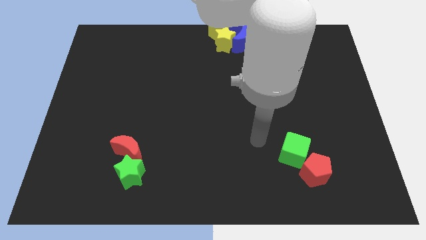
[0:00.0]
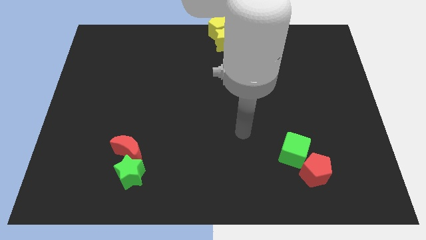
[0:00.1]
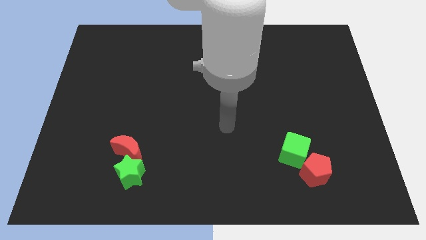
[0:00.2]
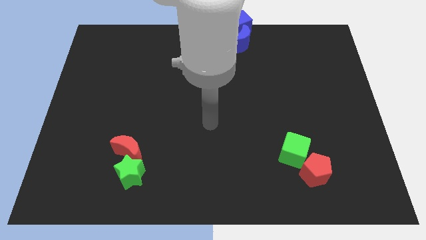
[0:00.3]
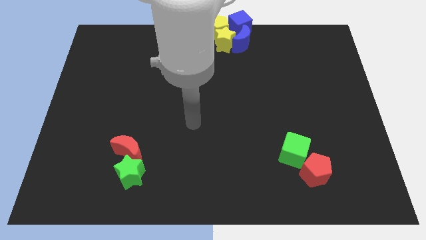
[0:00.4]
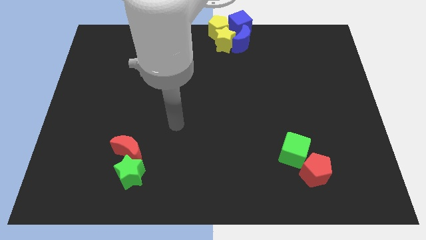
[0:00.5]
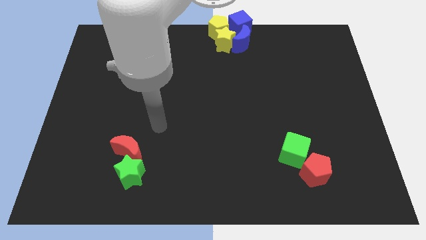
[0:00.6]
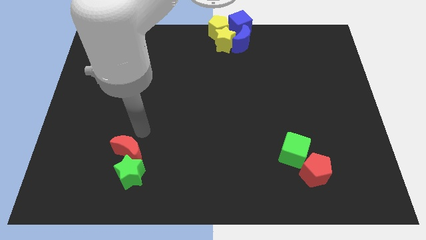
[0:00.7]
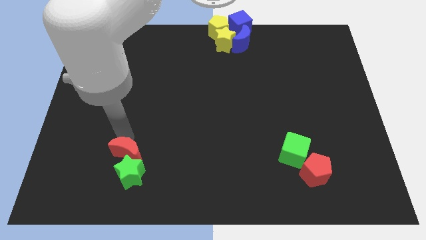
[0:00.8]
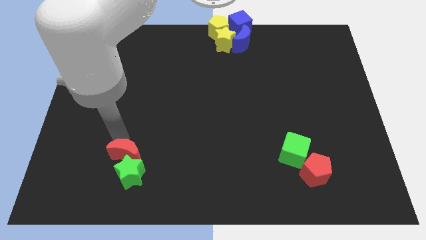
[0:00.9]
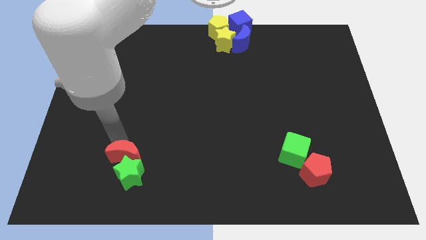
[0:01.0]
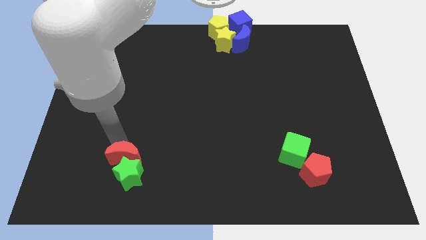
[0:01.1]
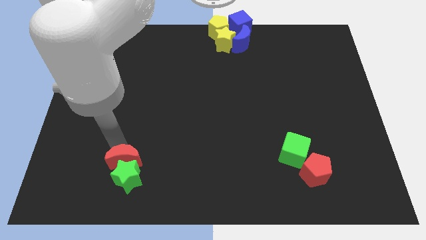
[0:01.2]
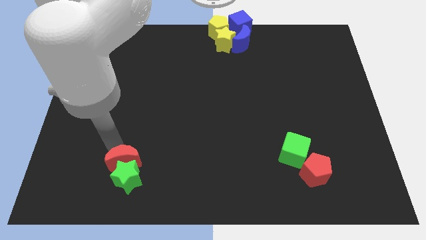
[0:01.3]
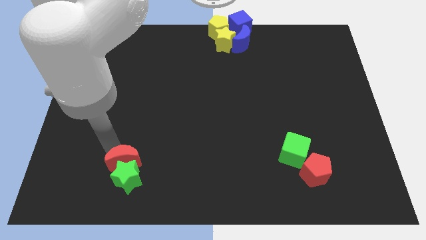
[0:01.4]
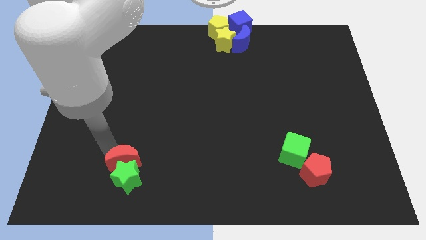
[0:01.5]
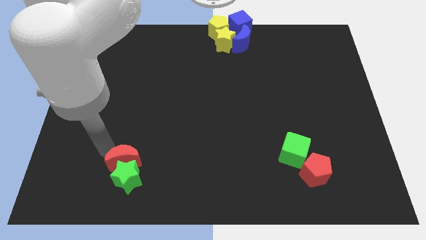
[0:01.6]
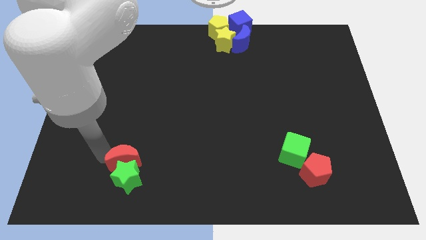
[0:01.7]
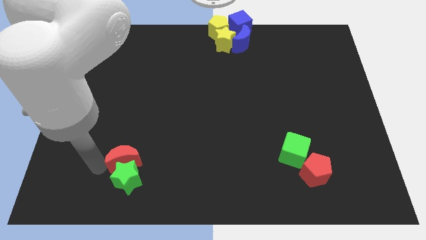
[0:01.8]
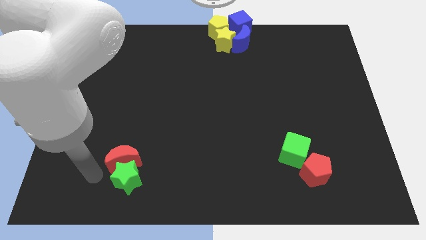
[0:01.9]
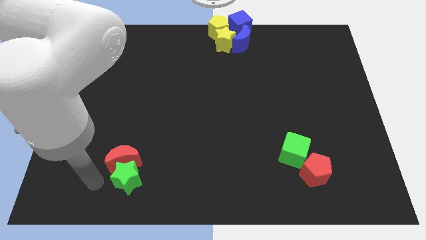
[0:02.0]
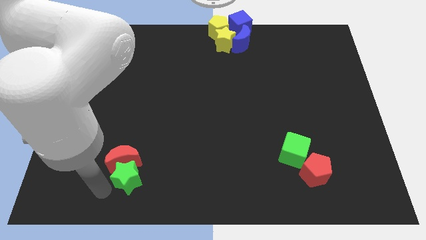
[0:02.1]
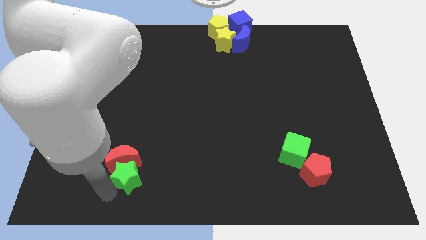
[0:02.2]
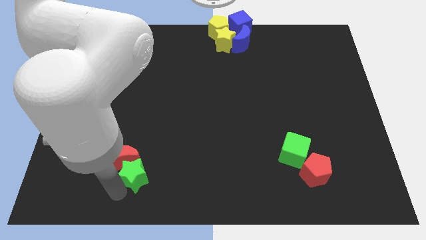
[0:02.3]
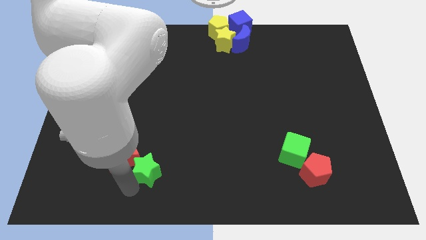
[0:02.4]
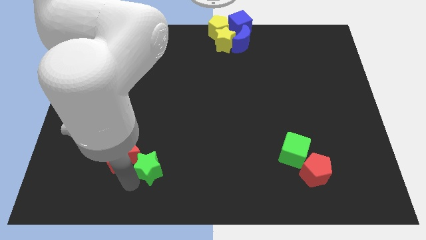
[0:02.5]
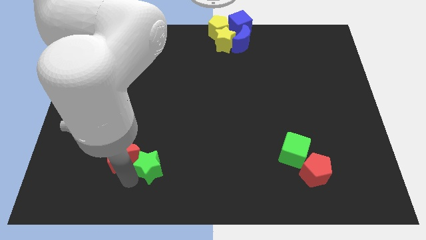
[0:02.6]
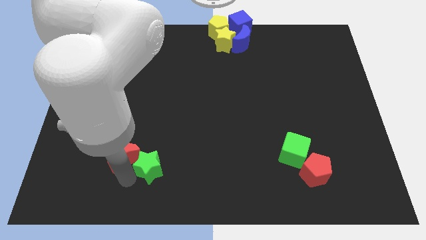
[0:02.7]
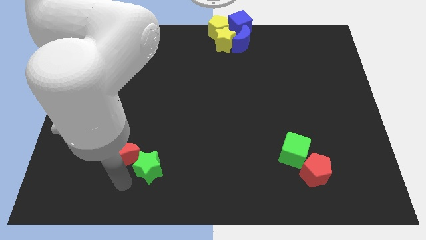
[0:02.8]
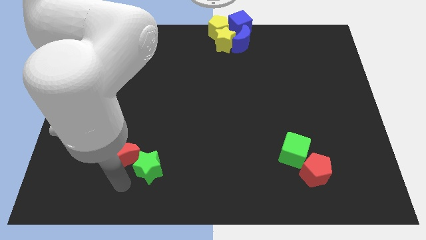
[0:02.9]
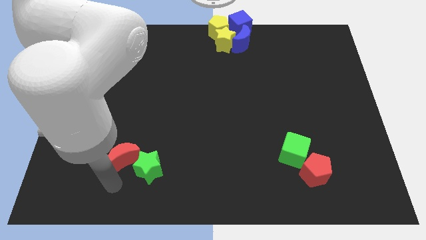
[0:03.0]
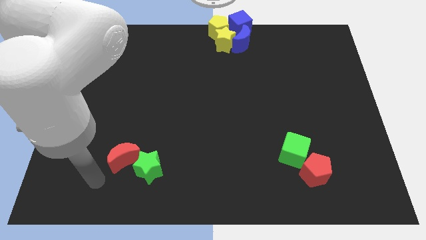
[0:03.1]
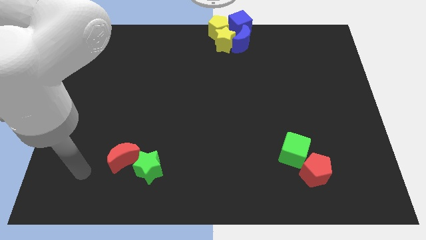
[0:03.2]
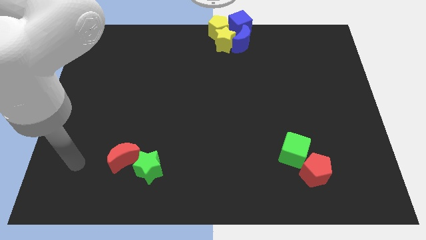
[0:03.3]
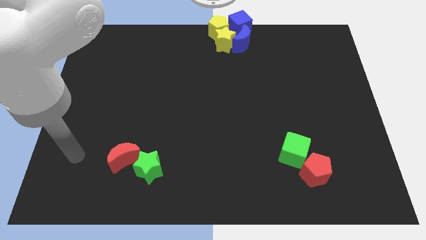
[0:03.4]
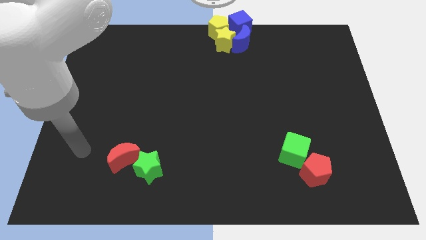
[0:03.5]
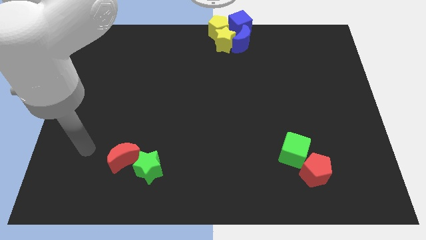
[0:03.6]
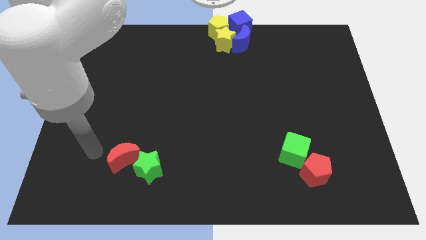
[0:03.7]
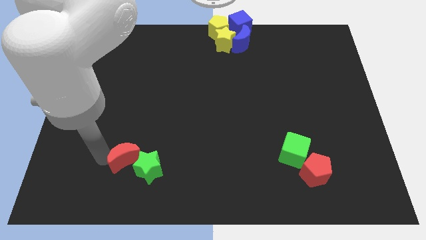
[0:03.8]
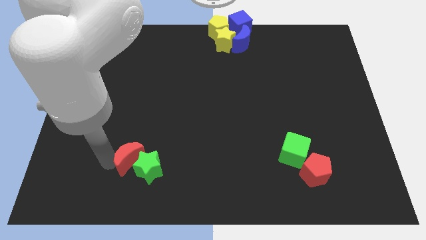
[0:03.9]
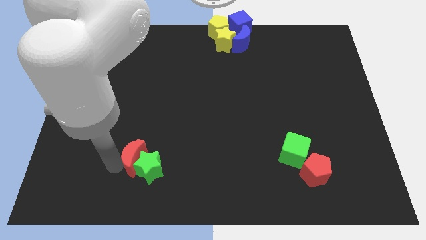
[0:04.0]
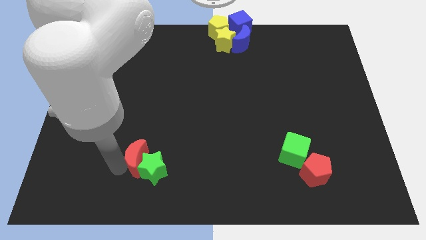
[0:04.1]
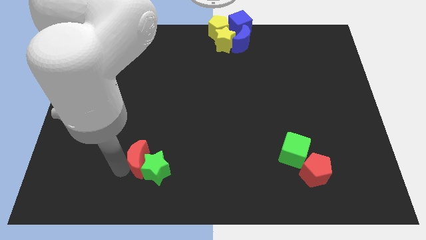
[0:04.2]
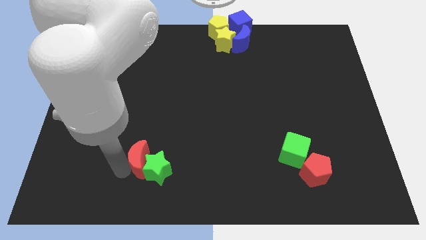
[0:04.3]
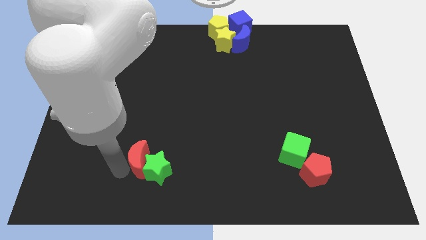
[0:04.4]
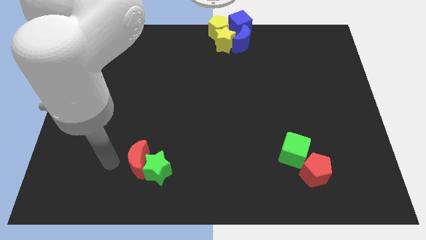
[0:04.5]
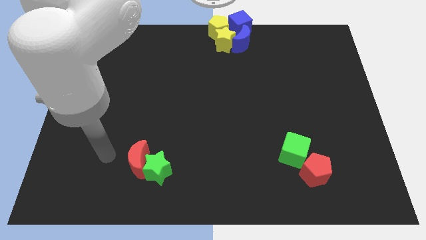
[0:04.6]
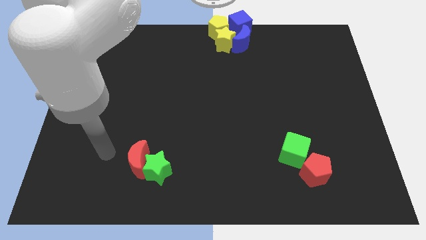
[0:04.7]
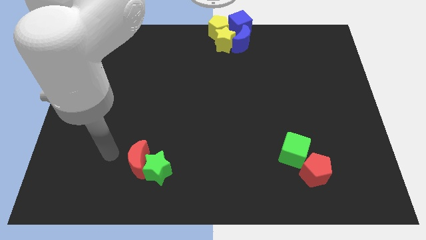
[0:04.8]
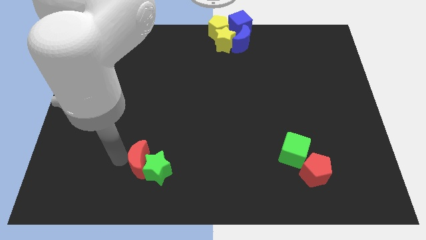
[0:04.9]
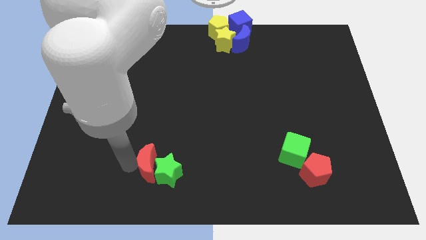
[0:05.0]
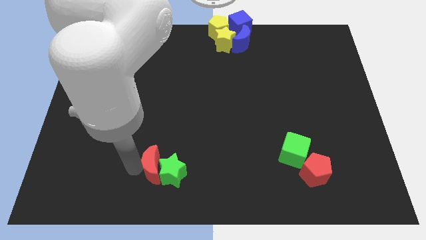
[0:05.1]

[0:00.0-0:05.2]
push the red crescent and green star towards the center

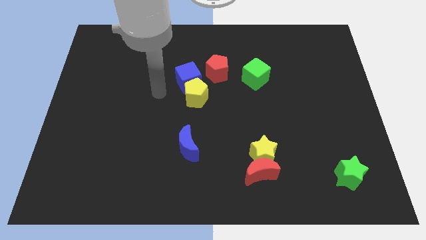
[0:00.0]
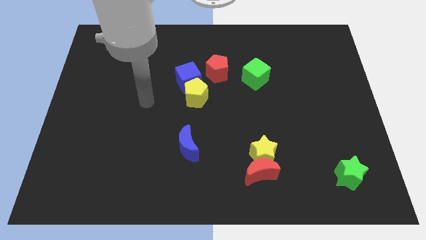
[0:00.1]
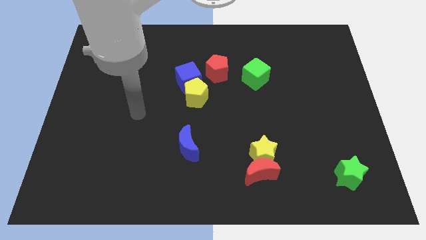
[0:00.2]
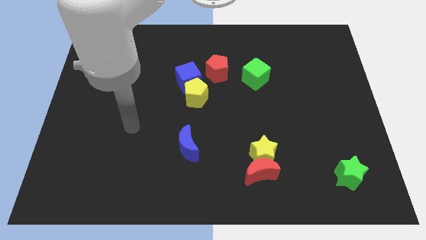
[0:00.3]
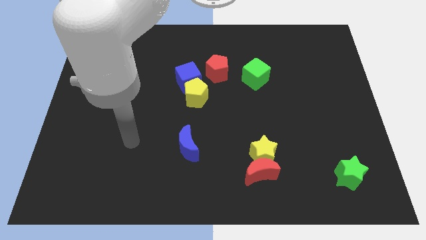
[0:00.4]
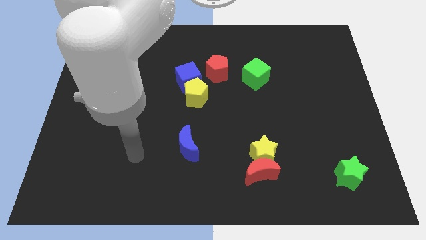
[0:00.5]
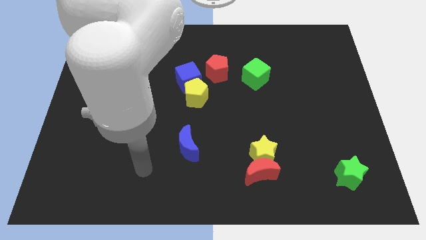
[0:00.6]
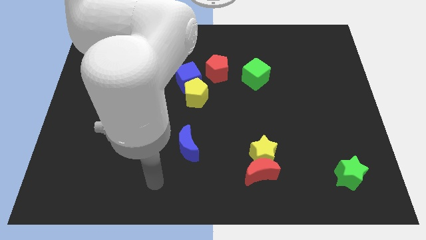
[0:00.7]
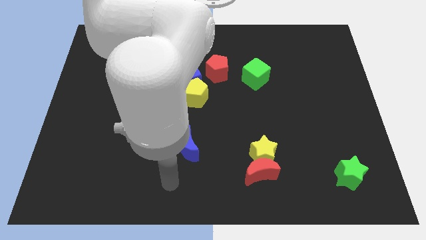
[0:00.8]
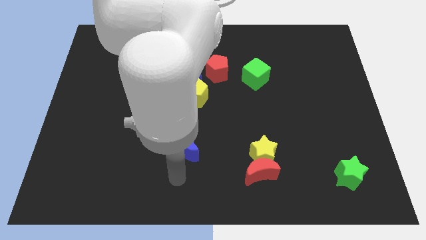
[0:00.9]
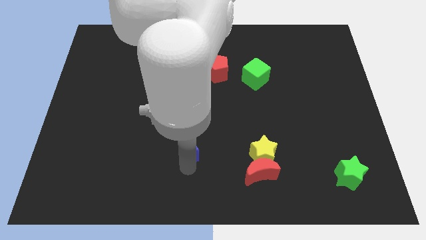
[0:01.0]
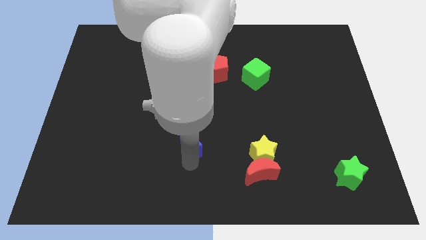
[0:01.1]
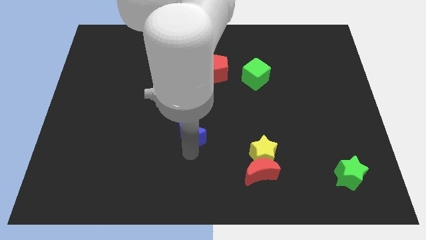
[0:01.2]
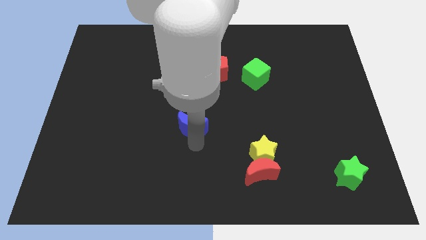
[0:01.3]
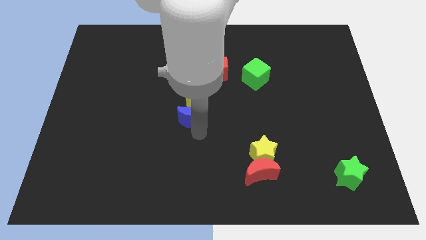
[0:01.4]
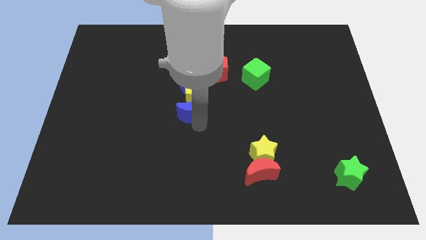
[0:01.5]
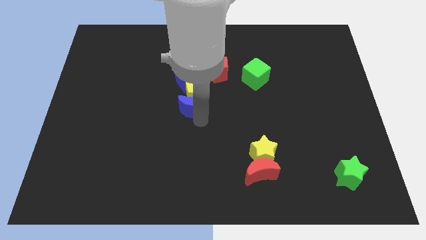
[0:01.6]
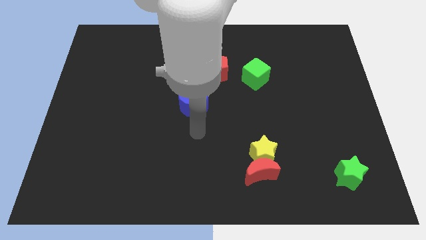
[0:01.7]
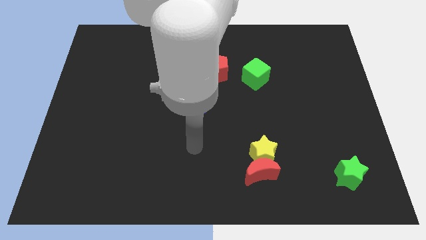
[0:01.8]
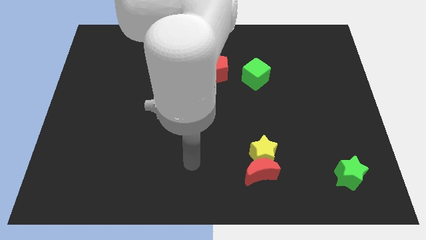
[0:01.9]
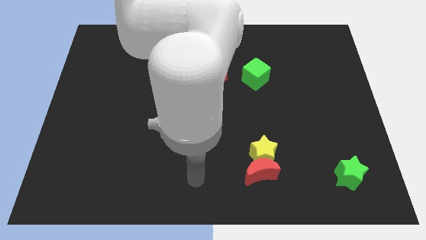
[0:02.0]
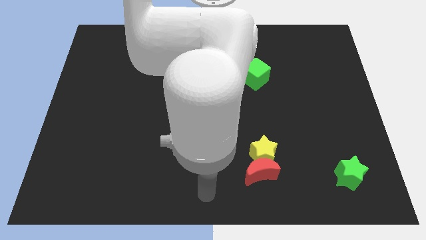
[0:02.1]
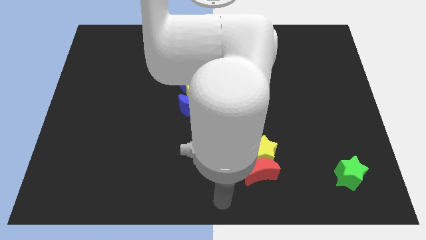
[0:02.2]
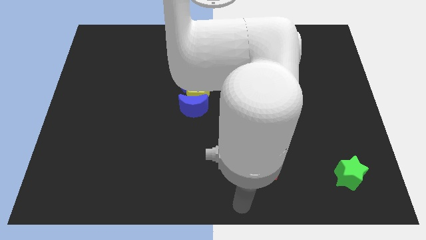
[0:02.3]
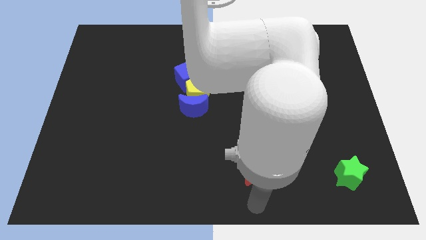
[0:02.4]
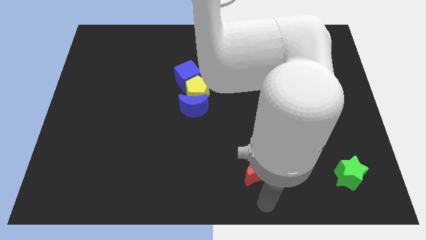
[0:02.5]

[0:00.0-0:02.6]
move the blue crescent under the yellow pentagon

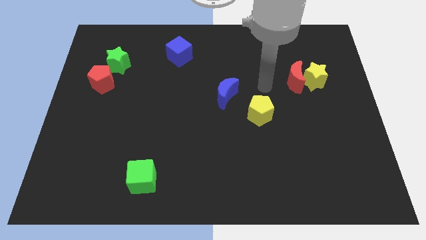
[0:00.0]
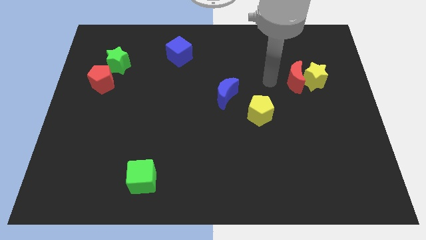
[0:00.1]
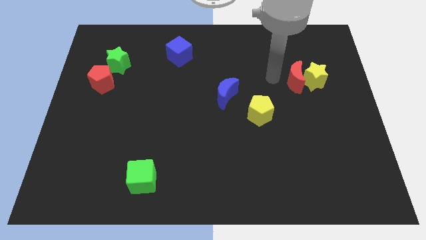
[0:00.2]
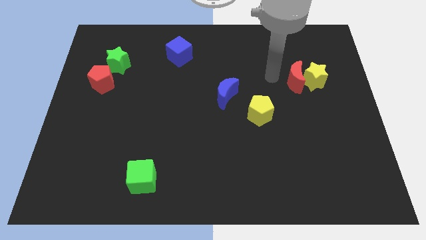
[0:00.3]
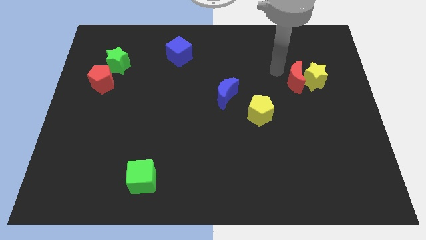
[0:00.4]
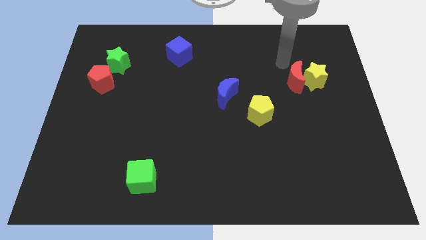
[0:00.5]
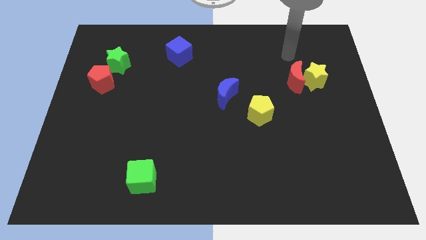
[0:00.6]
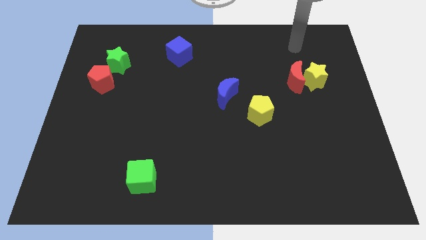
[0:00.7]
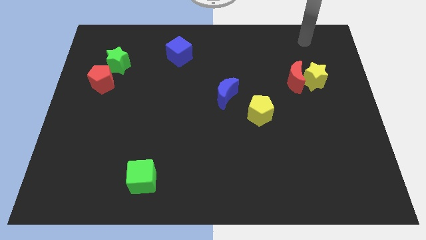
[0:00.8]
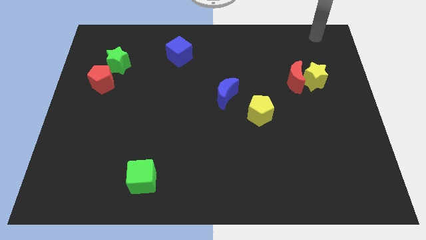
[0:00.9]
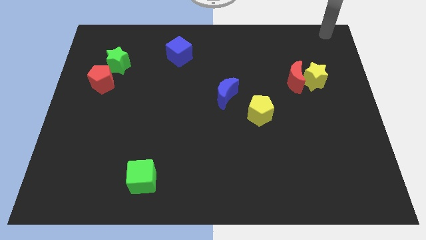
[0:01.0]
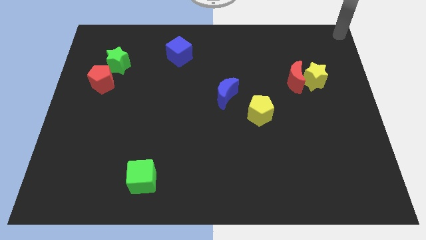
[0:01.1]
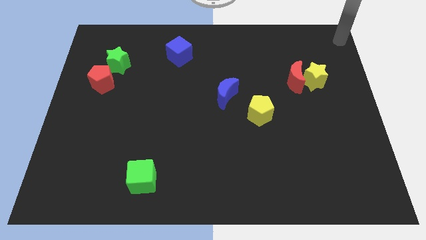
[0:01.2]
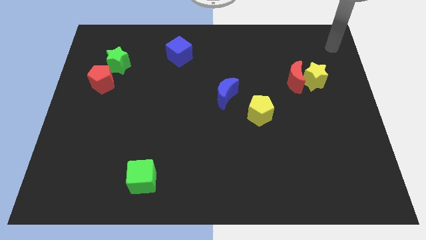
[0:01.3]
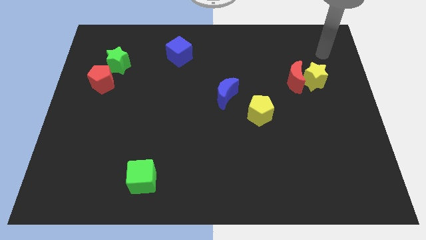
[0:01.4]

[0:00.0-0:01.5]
slide your arm towards the top right
